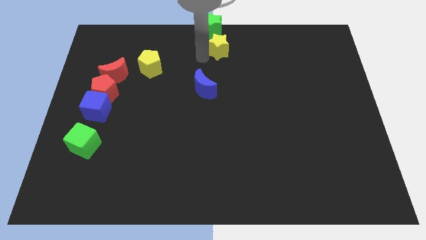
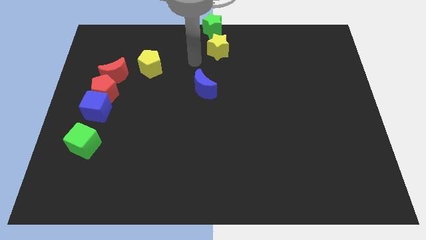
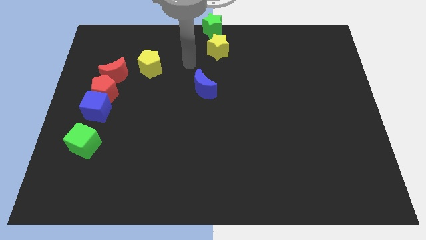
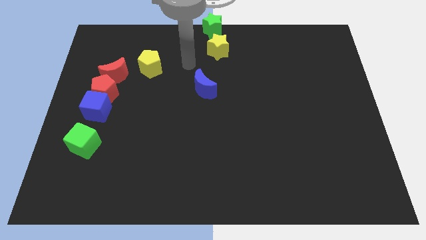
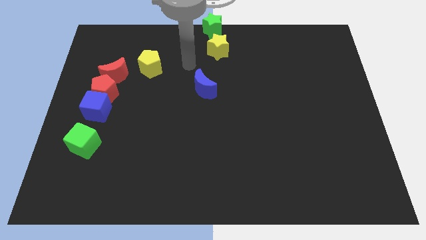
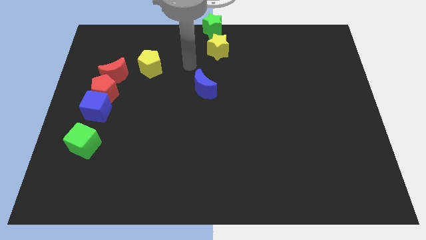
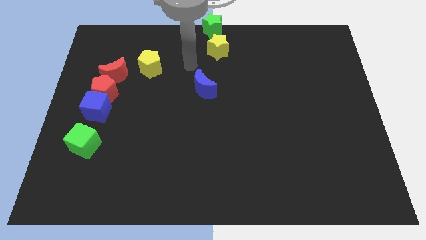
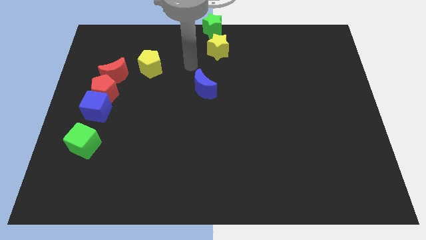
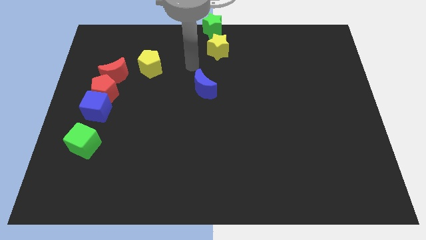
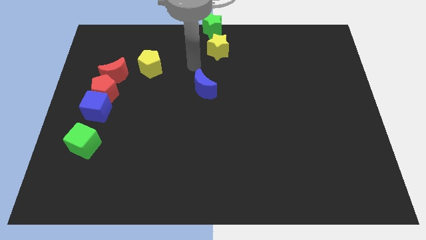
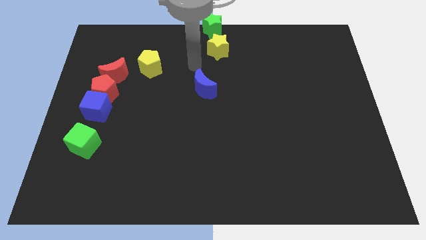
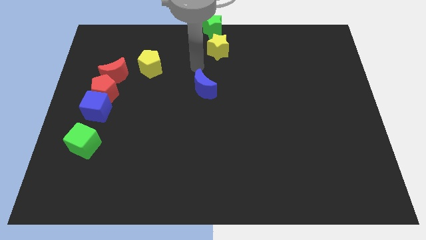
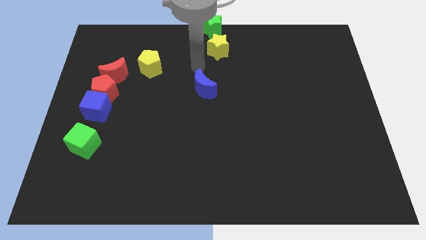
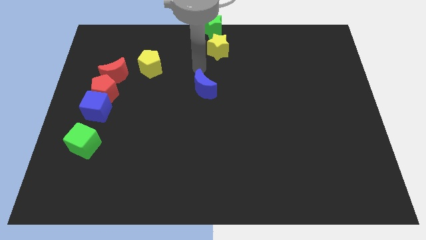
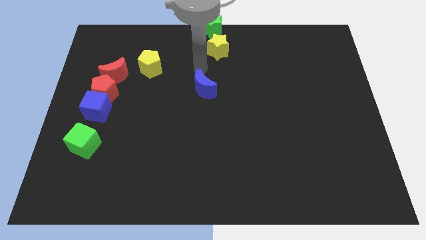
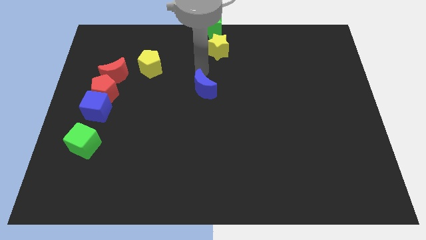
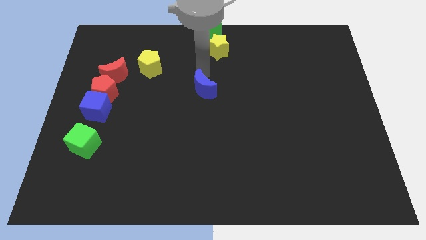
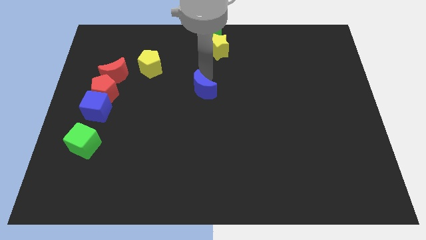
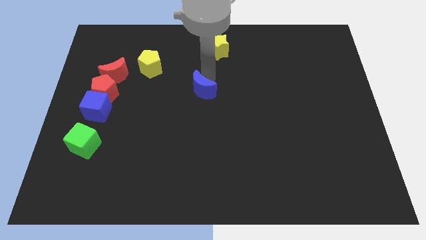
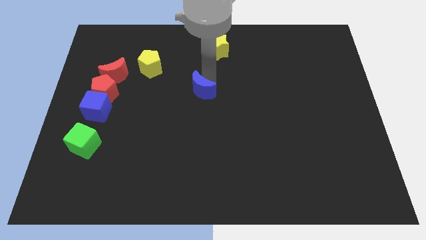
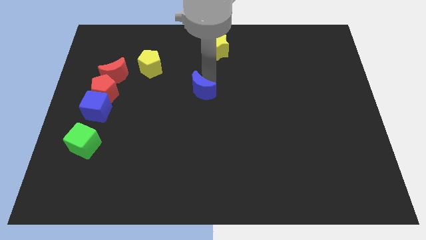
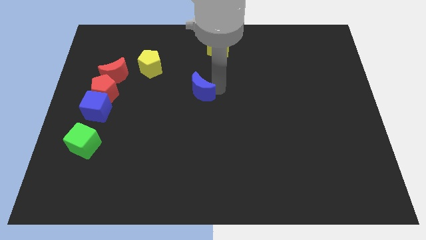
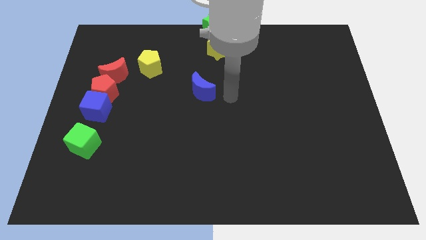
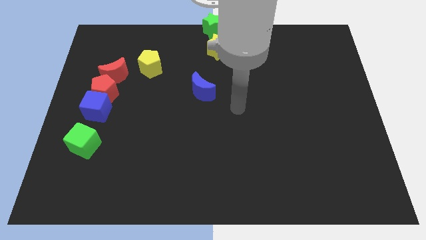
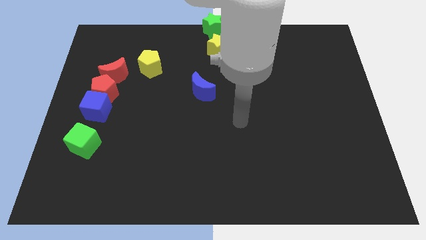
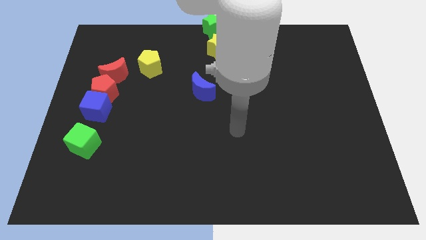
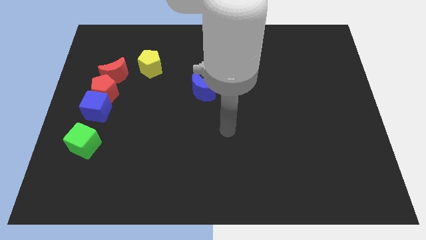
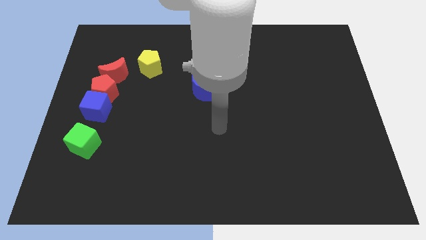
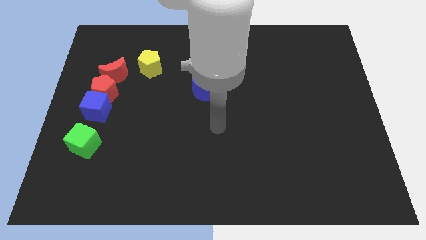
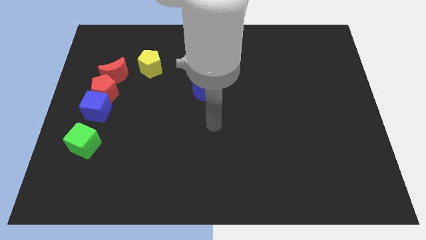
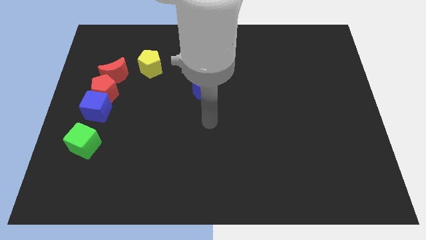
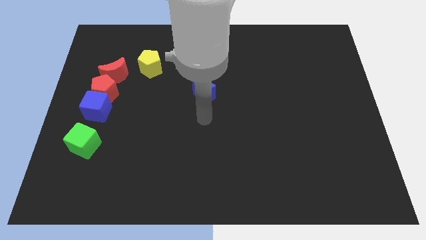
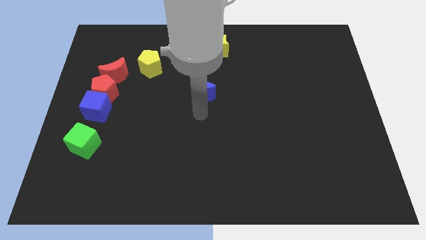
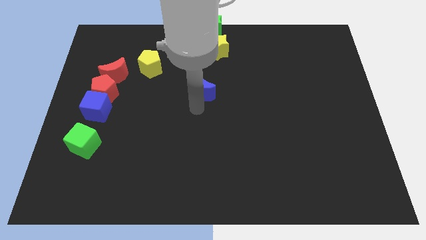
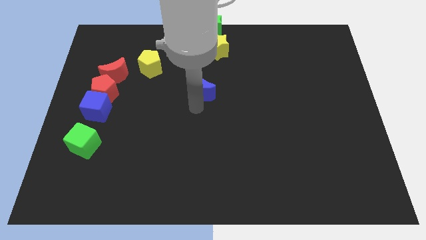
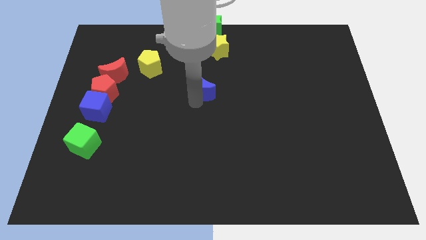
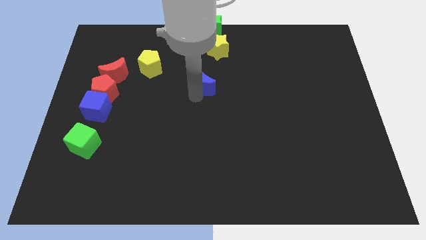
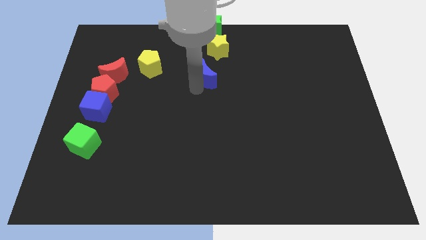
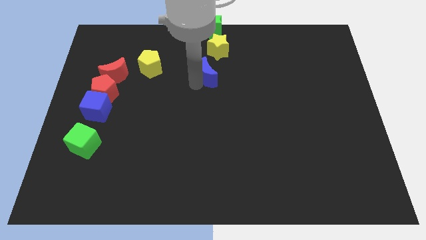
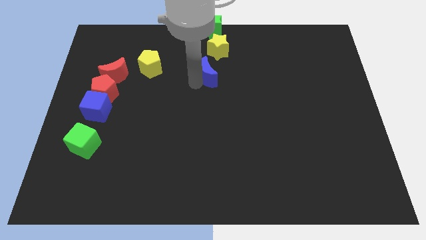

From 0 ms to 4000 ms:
place the blue moon at the bottom of yellow star

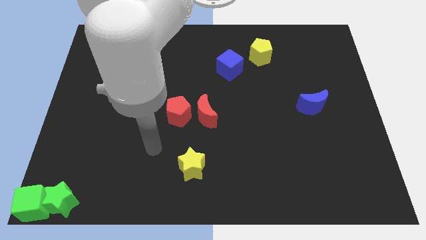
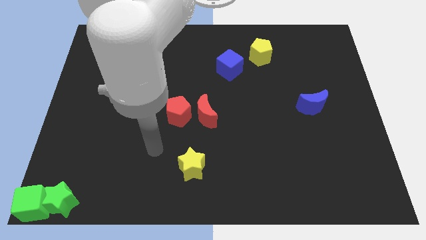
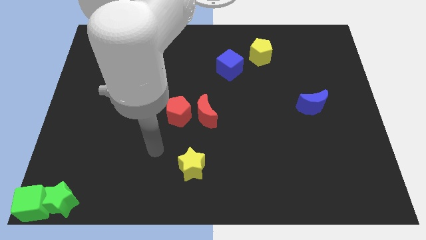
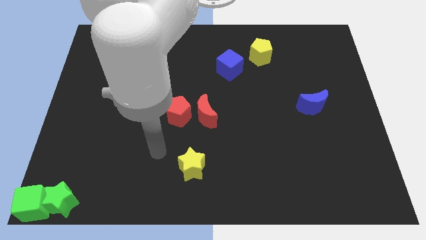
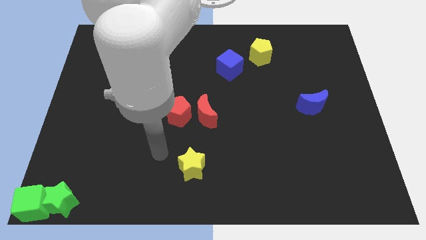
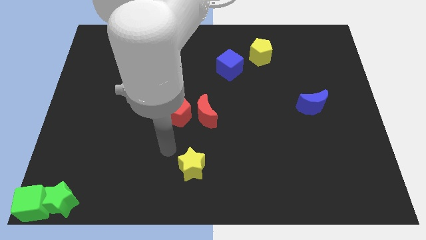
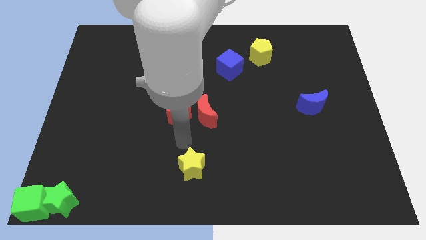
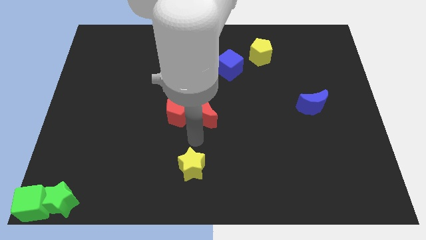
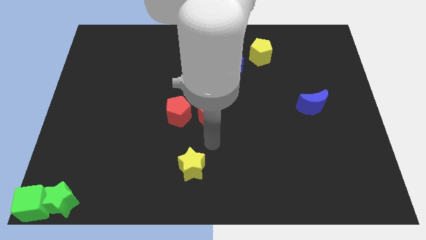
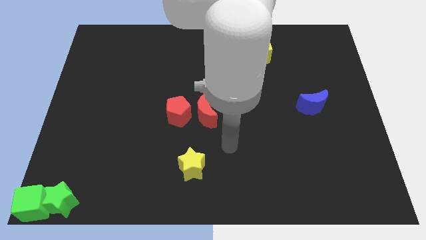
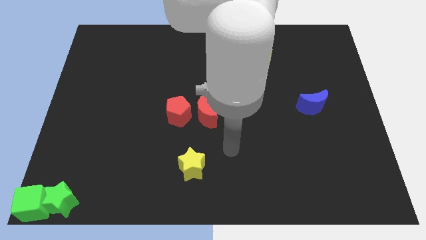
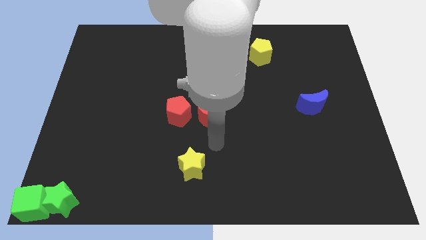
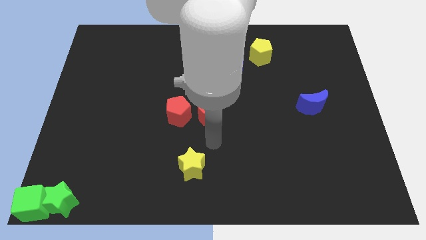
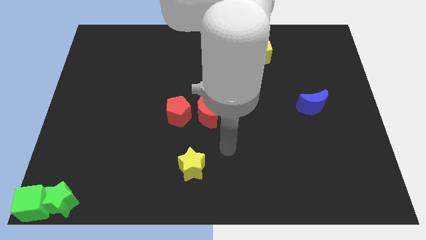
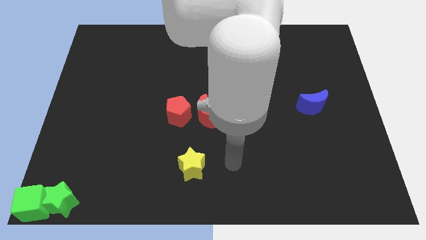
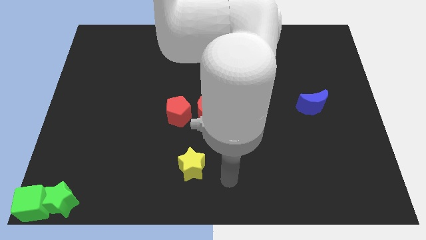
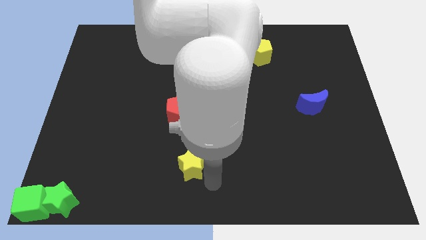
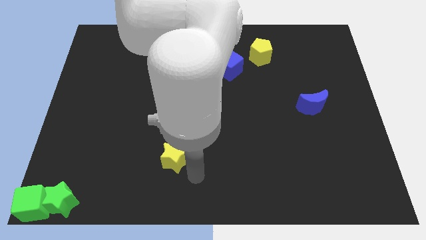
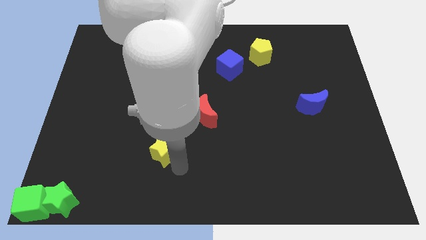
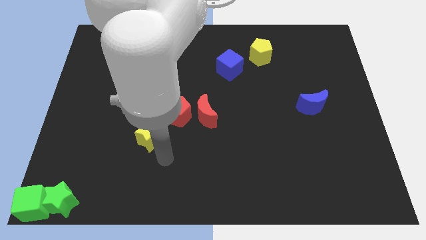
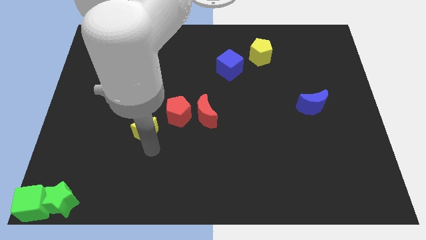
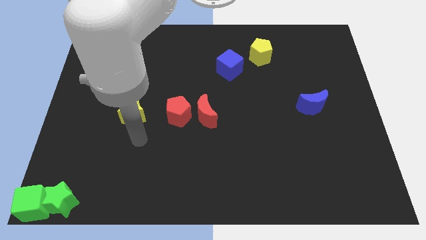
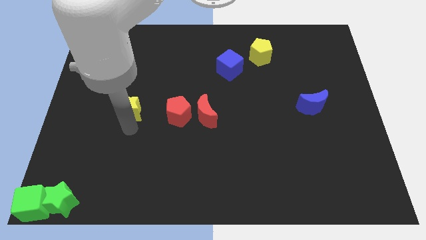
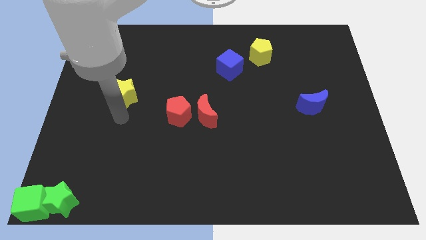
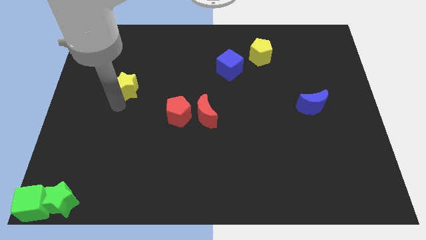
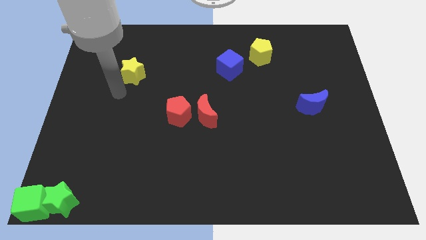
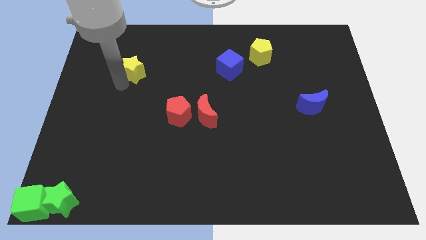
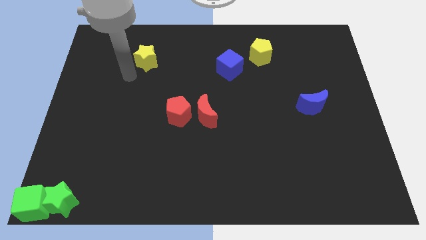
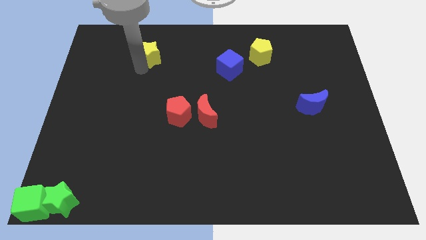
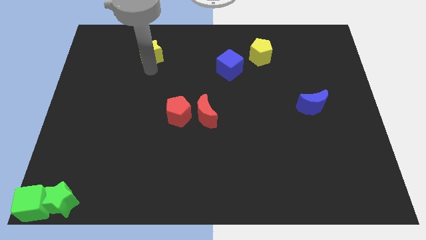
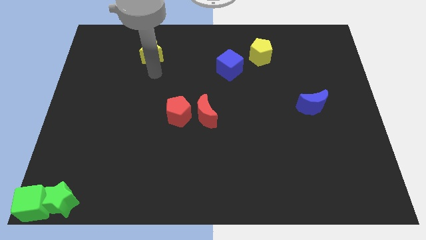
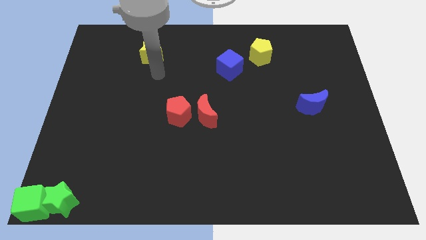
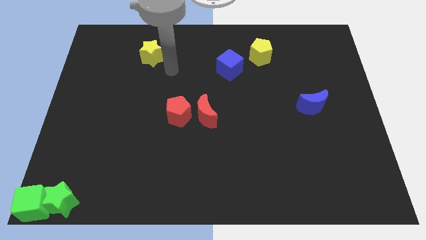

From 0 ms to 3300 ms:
move the yellow star towards the top center of the board

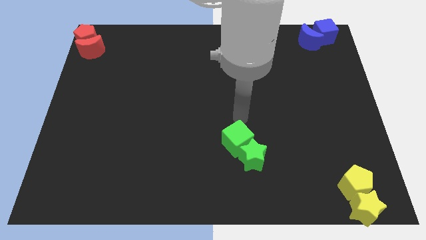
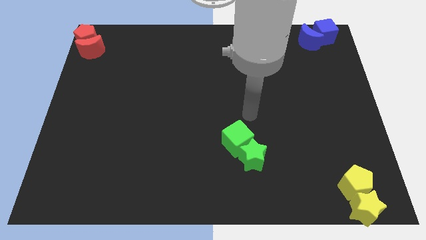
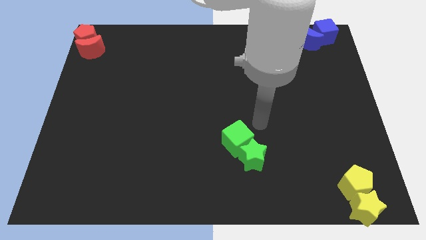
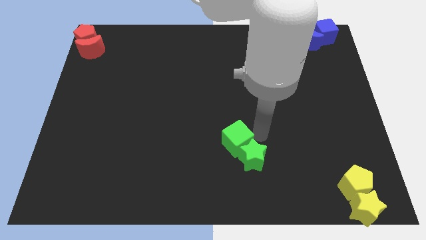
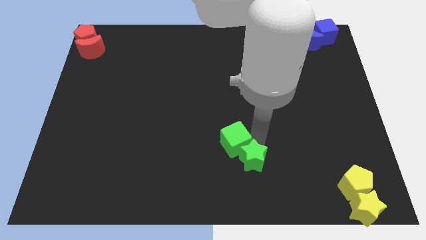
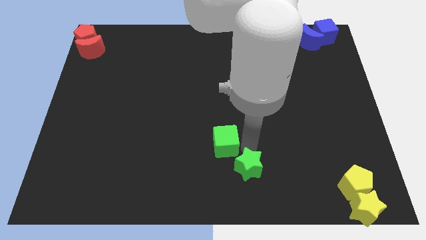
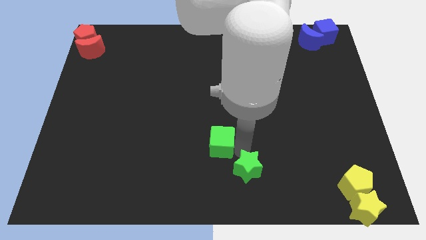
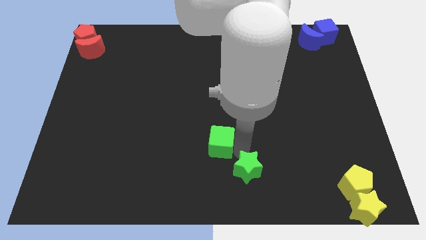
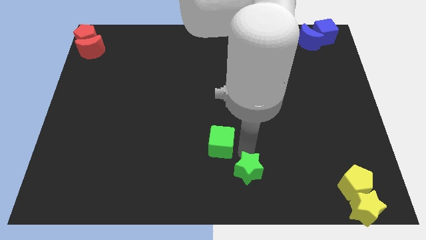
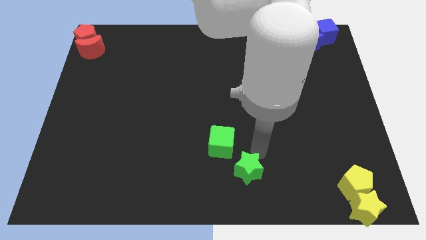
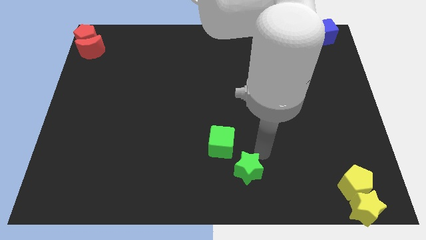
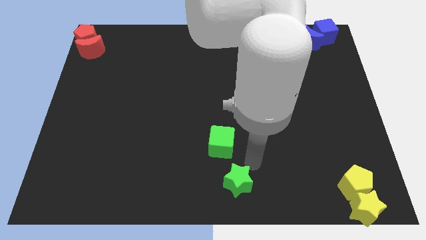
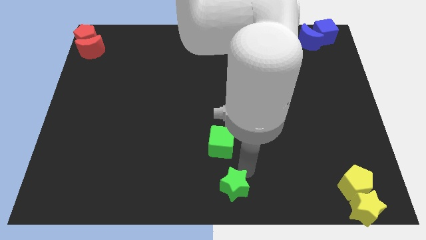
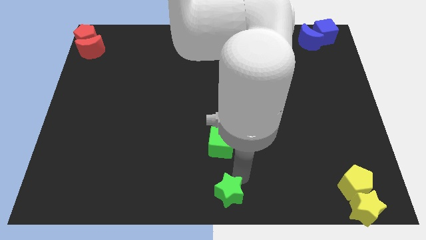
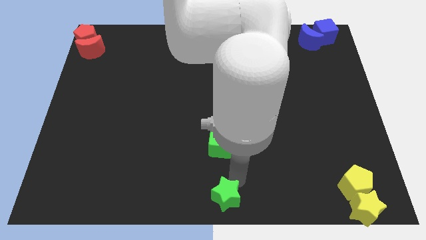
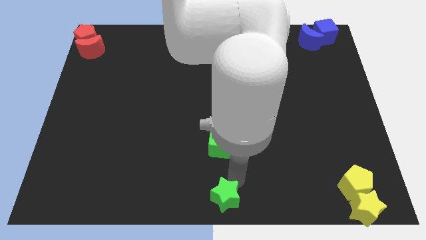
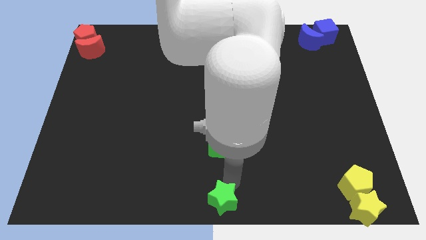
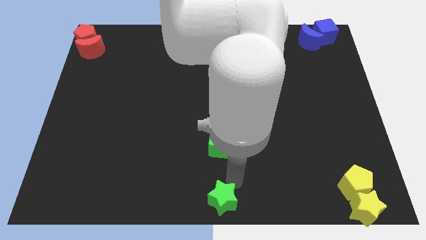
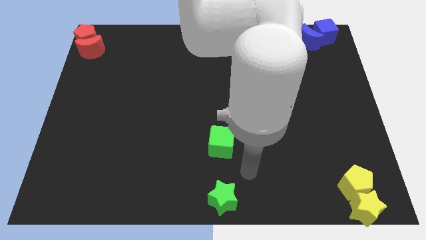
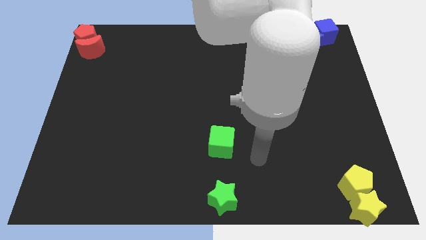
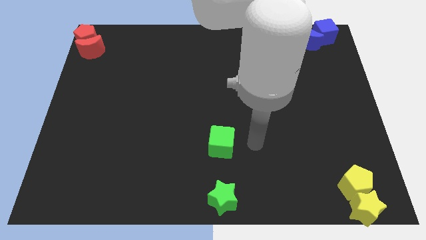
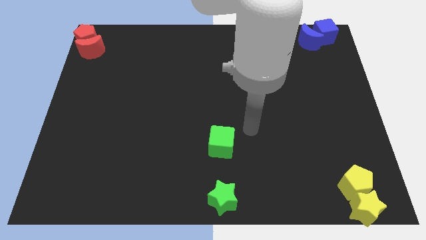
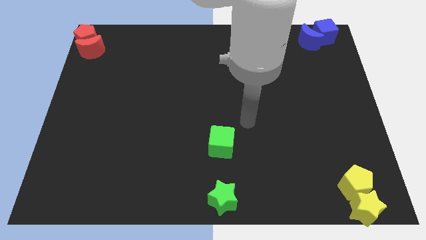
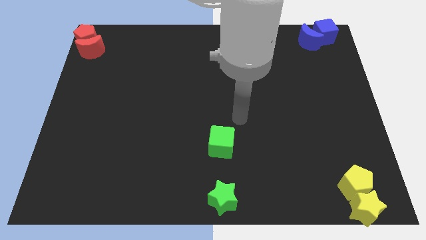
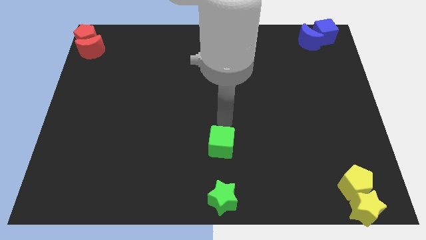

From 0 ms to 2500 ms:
move the green star to the bottom center of the board
